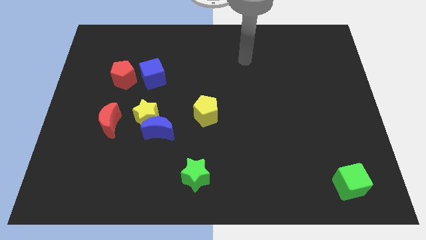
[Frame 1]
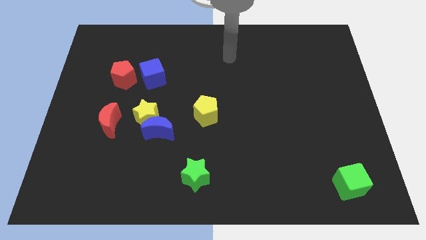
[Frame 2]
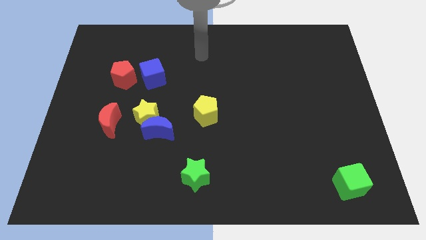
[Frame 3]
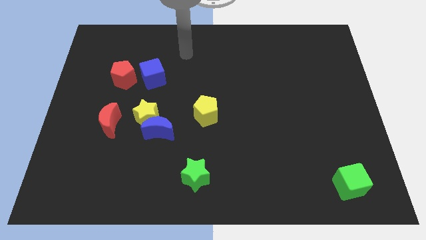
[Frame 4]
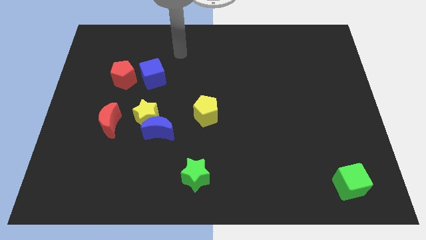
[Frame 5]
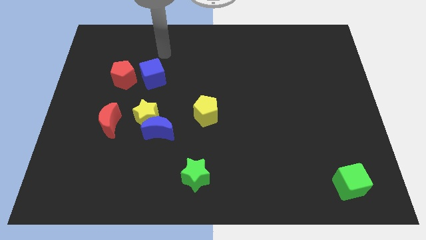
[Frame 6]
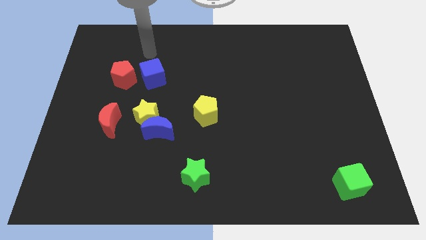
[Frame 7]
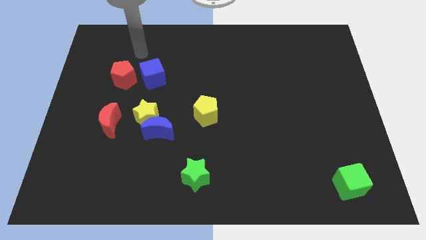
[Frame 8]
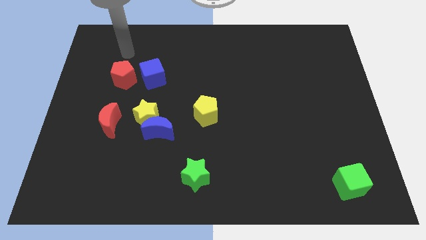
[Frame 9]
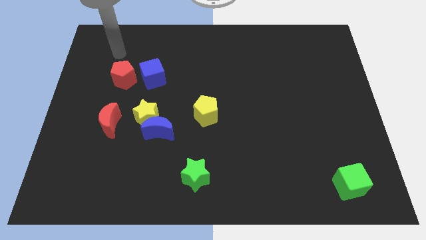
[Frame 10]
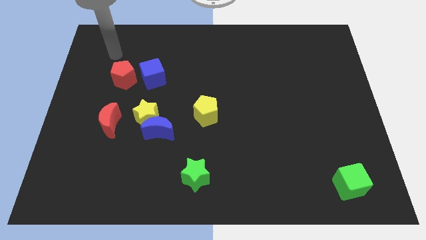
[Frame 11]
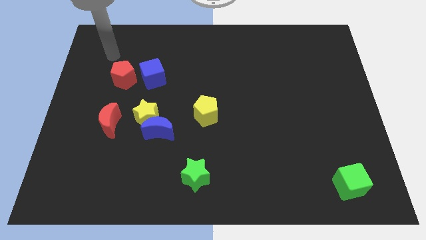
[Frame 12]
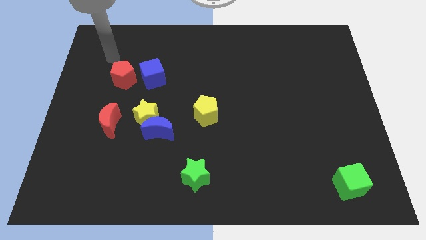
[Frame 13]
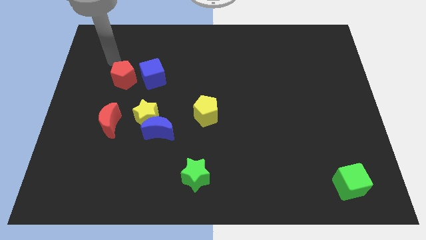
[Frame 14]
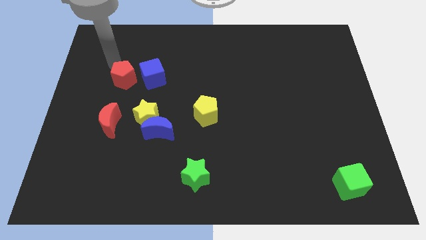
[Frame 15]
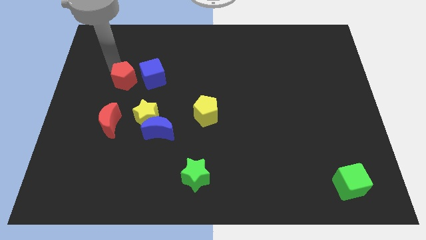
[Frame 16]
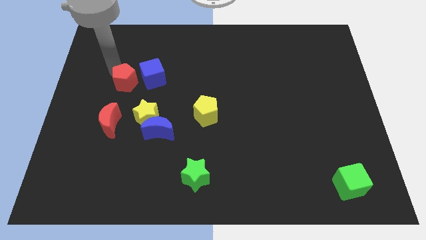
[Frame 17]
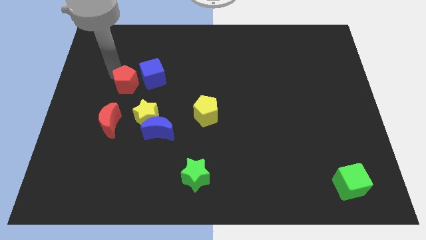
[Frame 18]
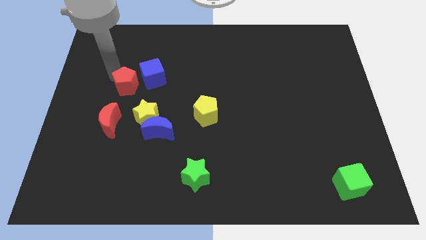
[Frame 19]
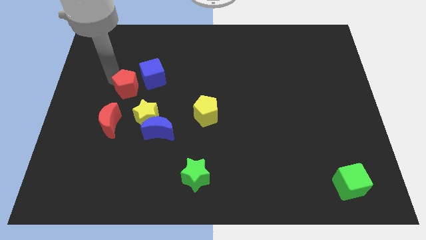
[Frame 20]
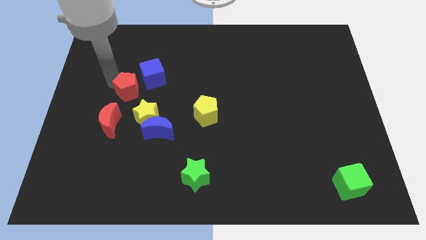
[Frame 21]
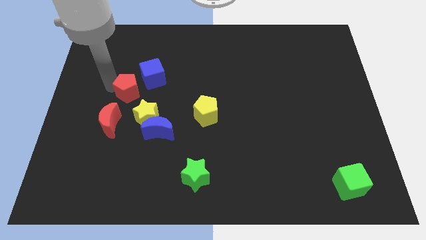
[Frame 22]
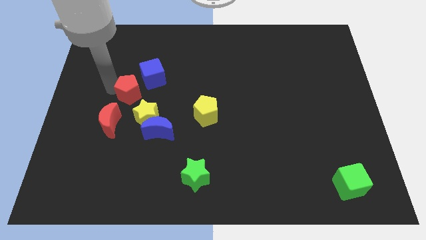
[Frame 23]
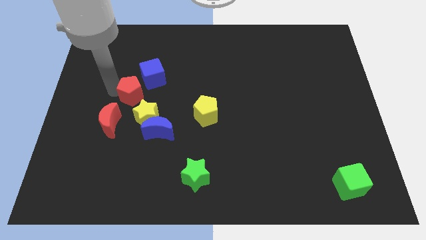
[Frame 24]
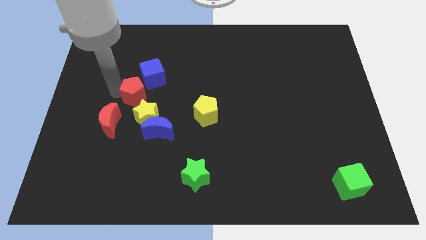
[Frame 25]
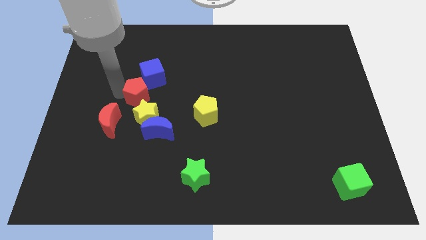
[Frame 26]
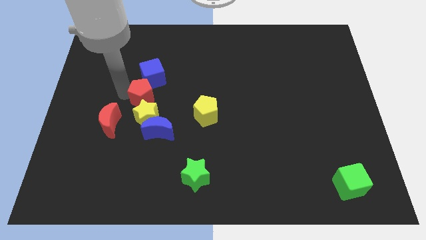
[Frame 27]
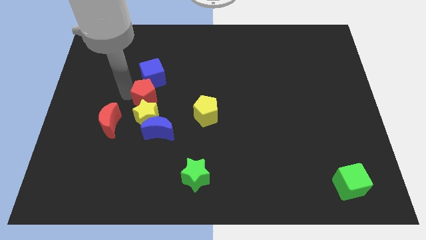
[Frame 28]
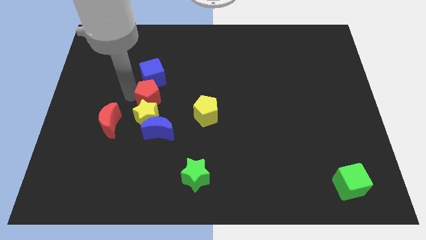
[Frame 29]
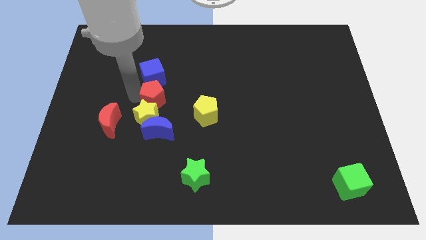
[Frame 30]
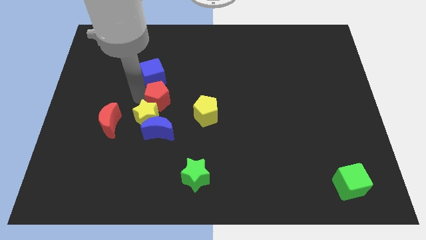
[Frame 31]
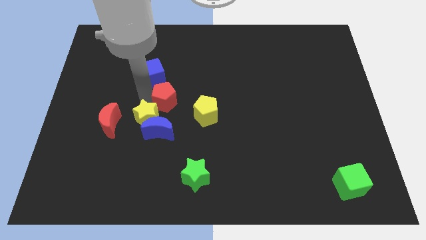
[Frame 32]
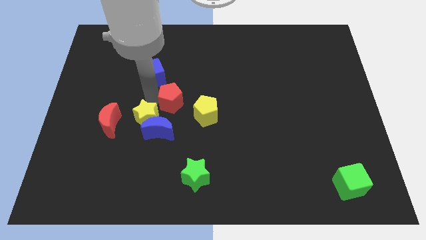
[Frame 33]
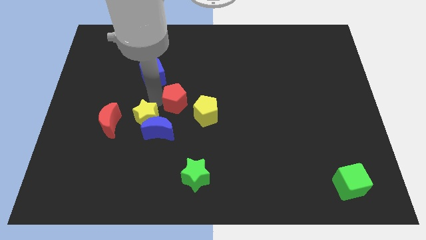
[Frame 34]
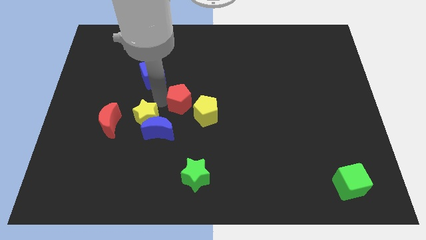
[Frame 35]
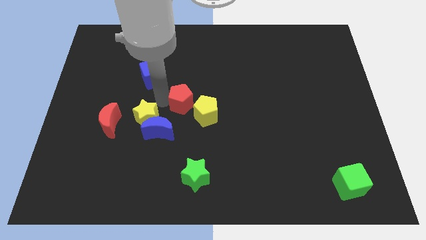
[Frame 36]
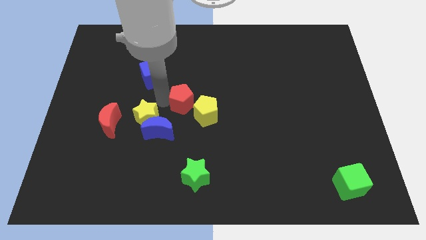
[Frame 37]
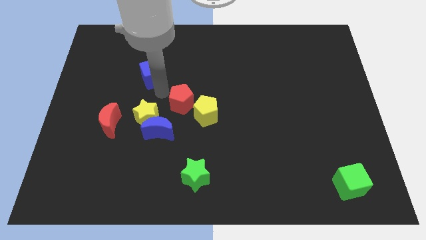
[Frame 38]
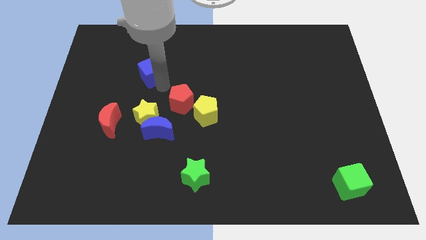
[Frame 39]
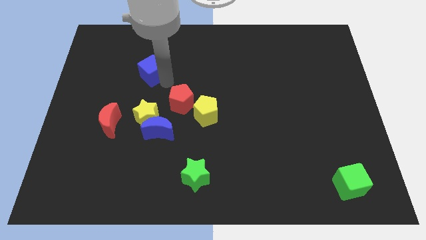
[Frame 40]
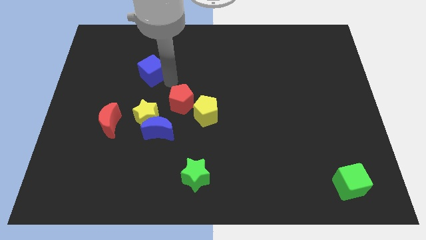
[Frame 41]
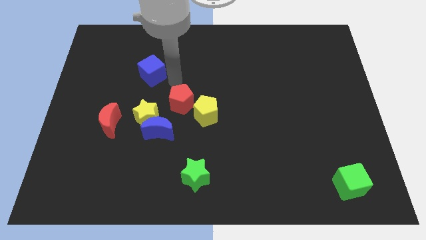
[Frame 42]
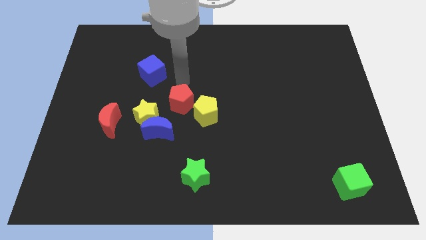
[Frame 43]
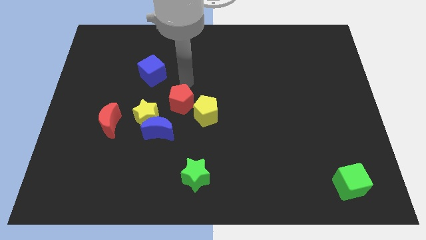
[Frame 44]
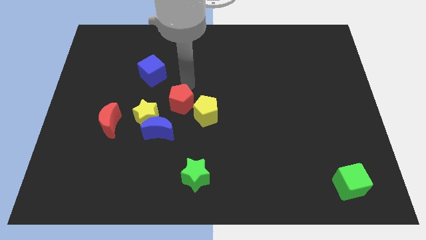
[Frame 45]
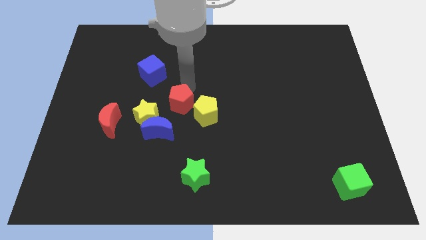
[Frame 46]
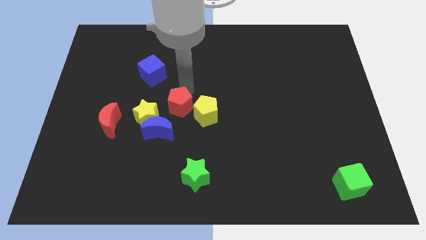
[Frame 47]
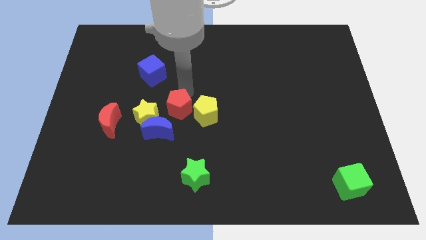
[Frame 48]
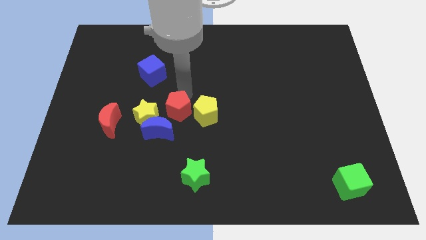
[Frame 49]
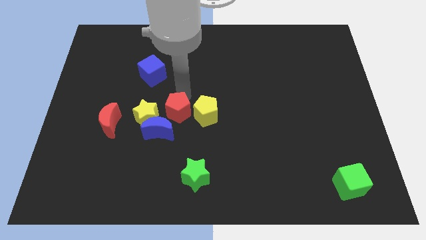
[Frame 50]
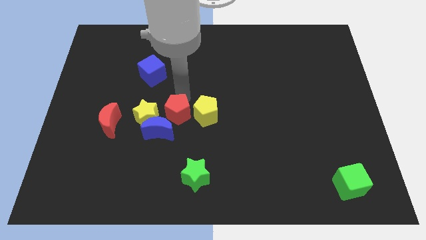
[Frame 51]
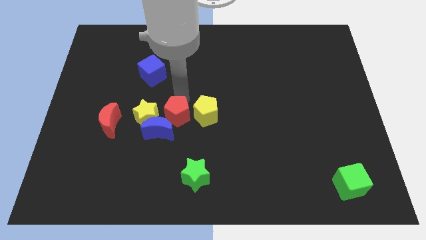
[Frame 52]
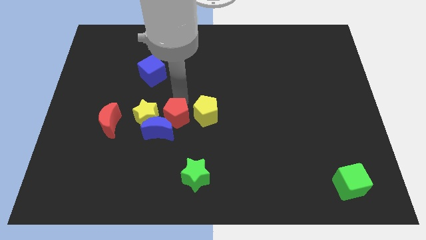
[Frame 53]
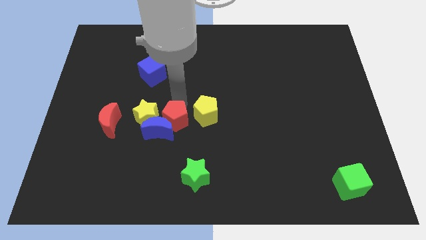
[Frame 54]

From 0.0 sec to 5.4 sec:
move the red pentagon towards the blue moon

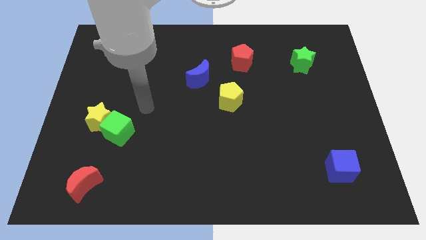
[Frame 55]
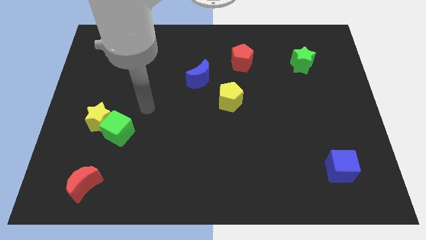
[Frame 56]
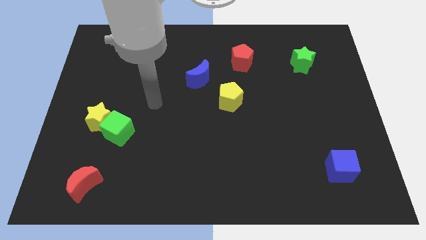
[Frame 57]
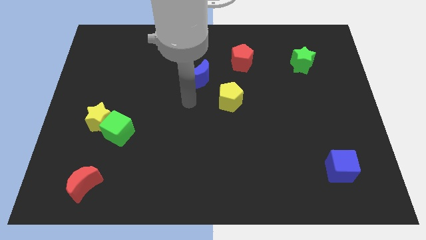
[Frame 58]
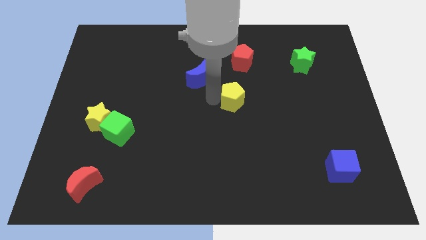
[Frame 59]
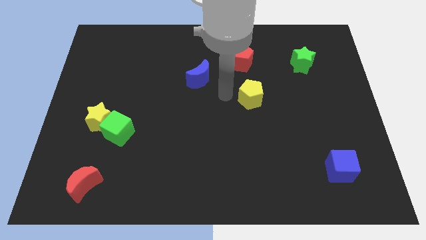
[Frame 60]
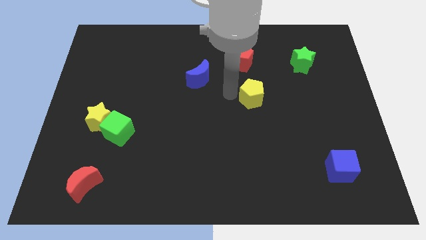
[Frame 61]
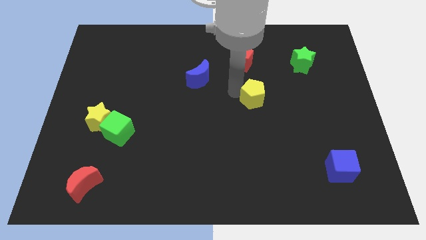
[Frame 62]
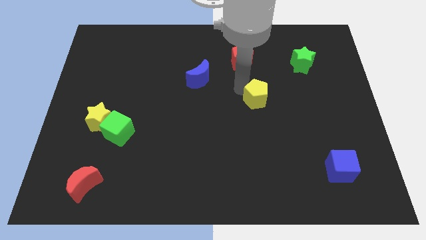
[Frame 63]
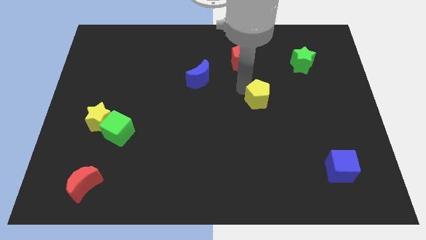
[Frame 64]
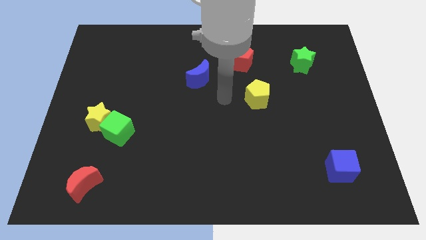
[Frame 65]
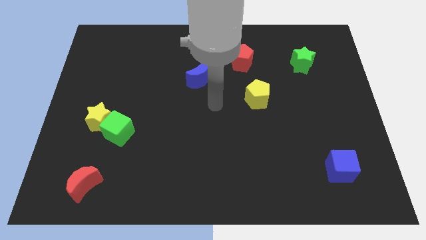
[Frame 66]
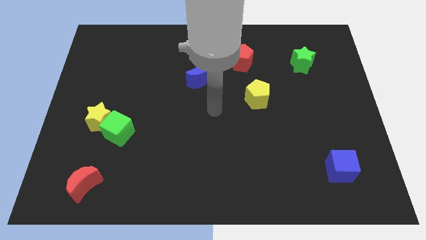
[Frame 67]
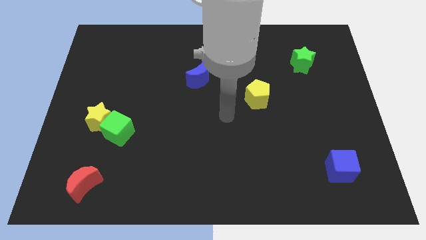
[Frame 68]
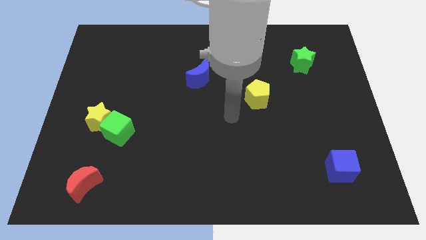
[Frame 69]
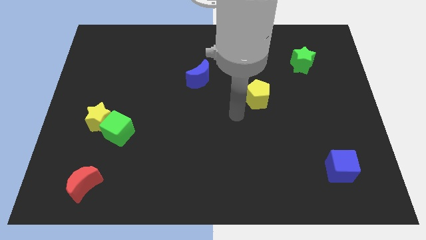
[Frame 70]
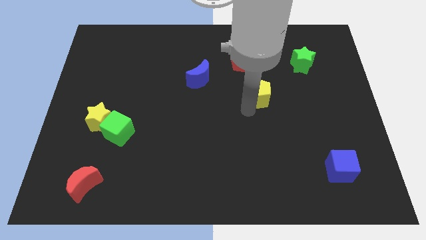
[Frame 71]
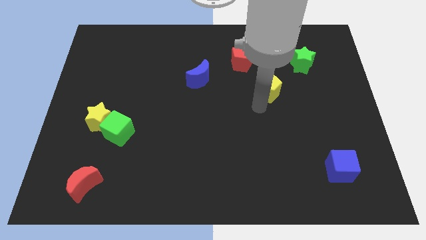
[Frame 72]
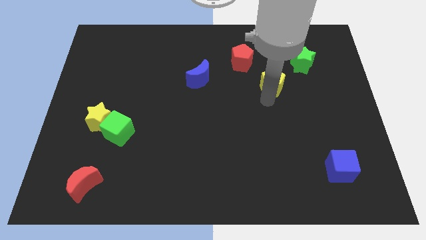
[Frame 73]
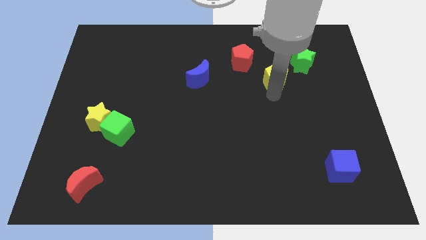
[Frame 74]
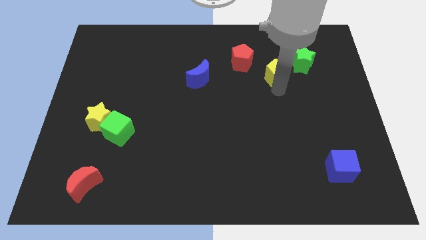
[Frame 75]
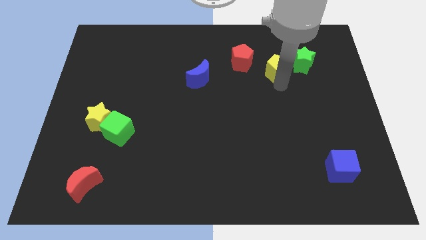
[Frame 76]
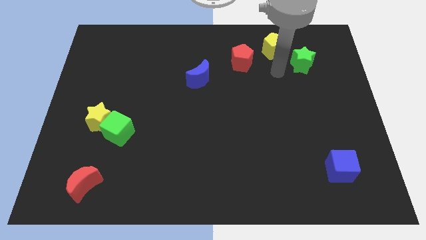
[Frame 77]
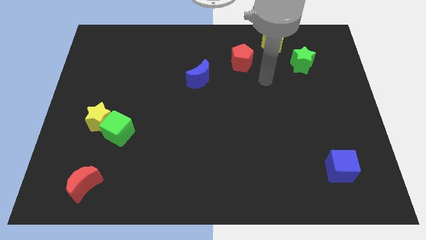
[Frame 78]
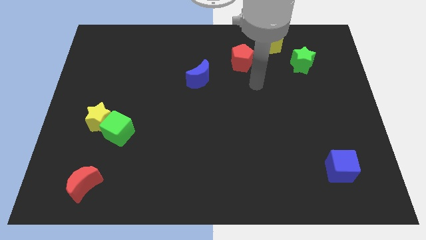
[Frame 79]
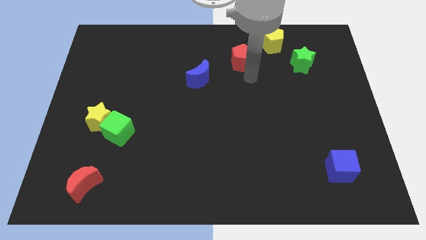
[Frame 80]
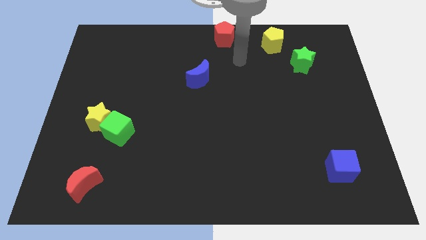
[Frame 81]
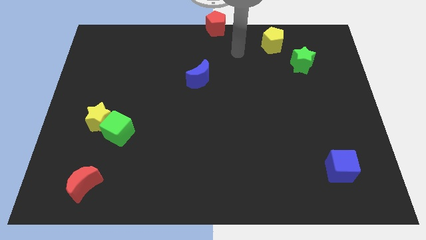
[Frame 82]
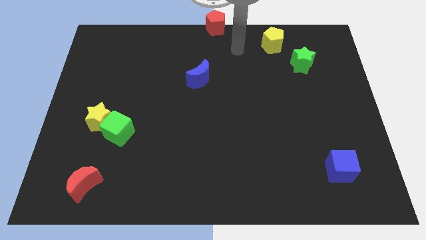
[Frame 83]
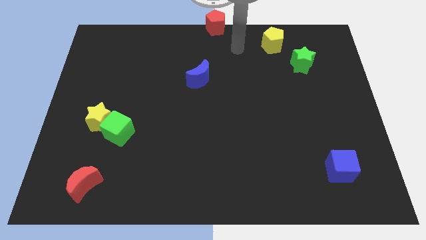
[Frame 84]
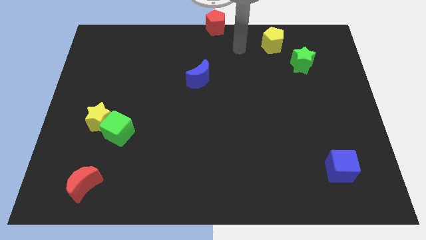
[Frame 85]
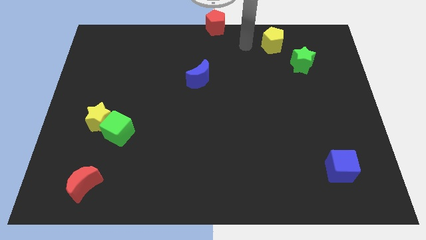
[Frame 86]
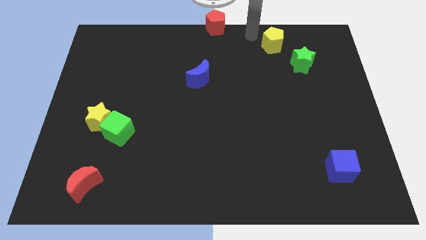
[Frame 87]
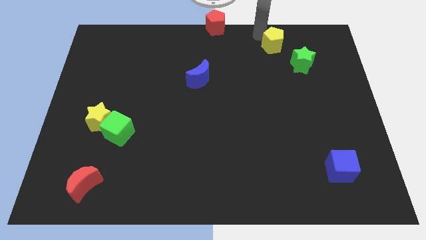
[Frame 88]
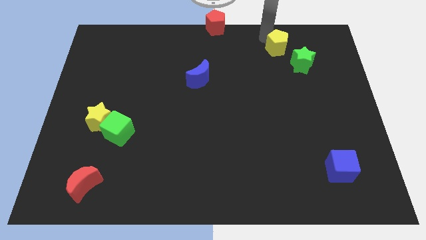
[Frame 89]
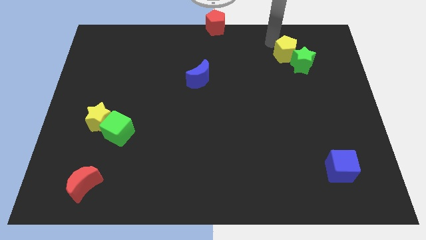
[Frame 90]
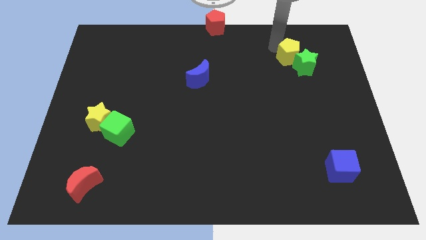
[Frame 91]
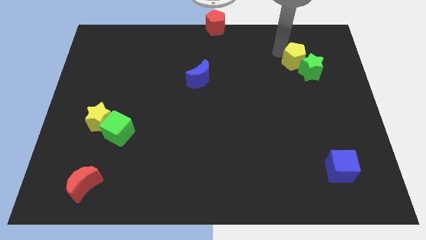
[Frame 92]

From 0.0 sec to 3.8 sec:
slide the yellow pentagon to the green star
